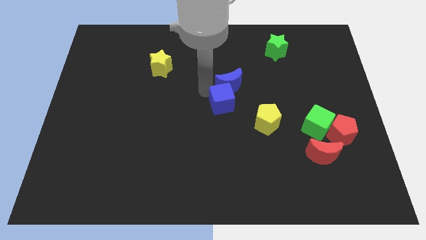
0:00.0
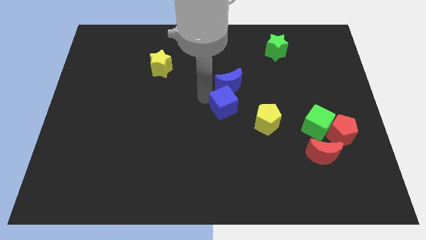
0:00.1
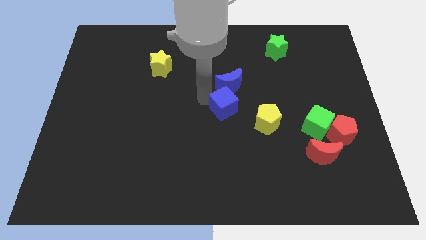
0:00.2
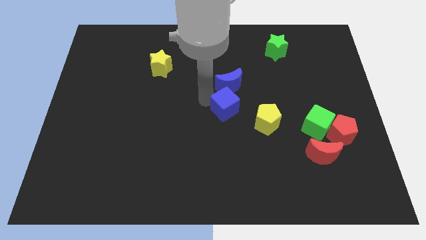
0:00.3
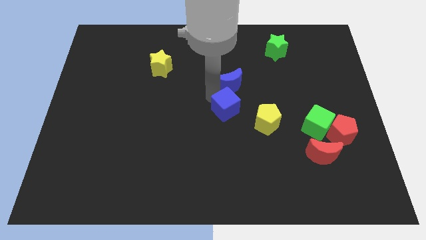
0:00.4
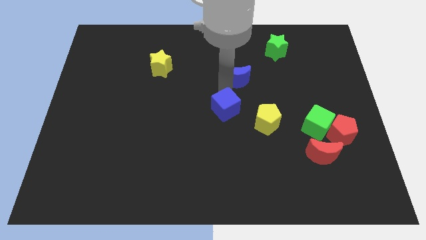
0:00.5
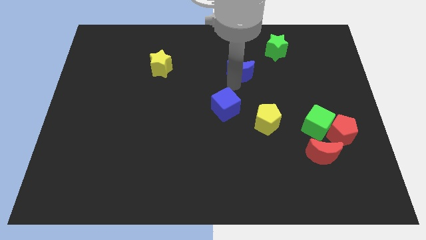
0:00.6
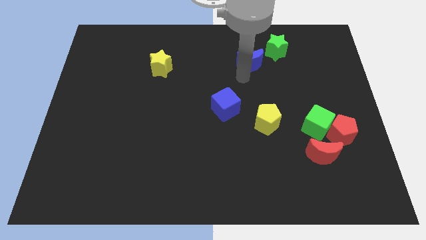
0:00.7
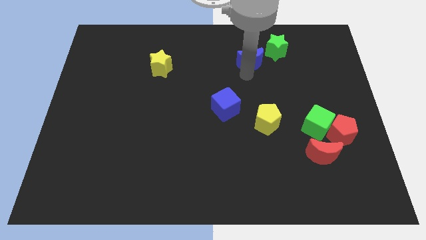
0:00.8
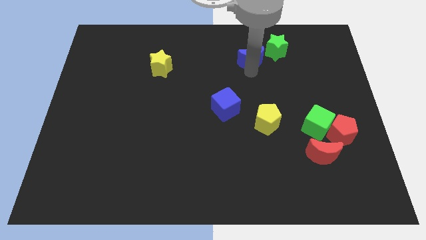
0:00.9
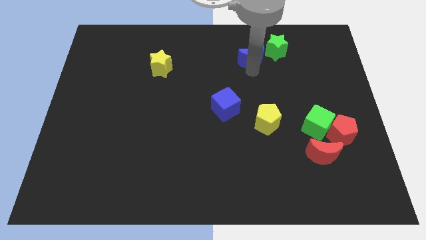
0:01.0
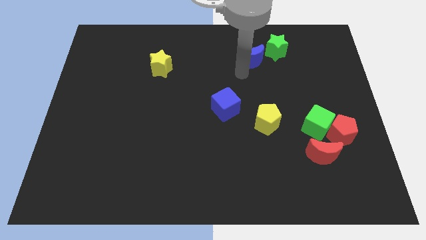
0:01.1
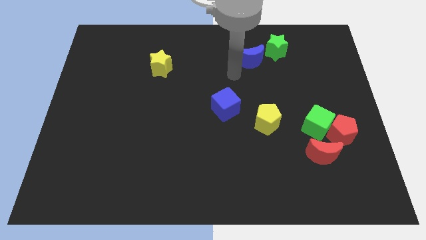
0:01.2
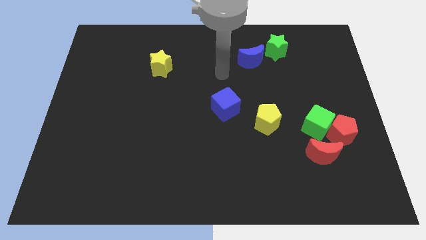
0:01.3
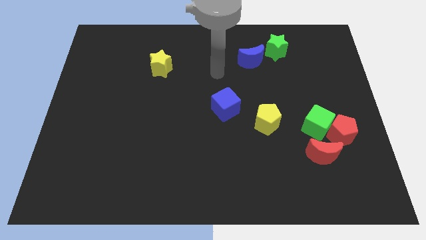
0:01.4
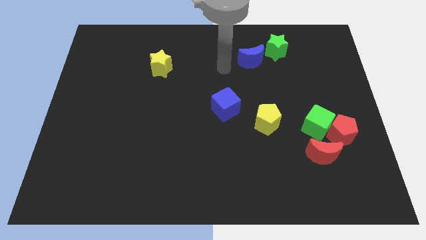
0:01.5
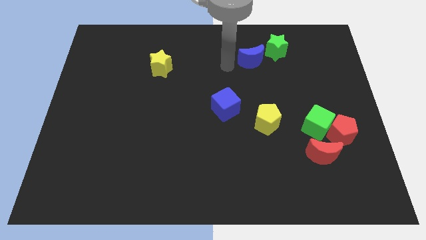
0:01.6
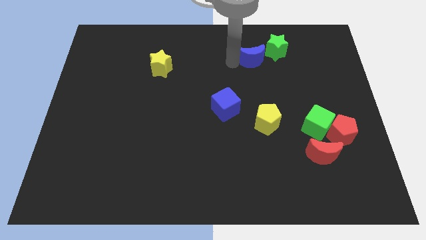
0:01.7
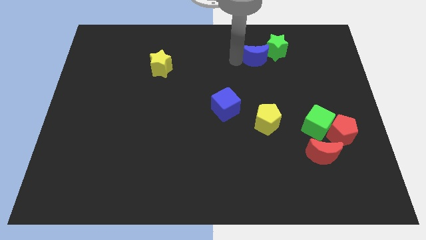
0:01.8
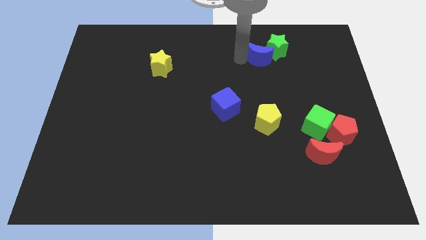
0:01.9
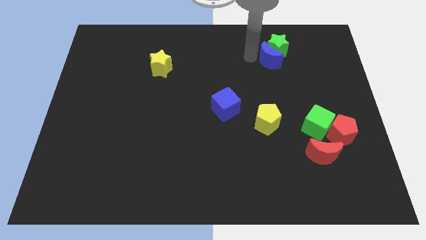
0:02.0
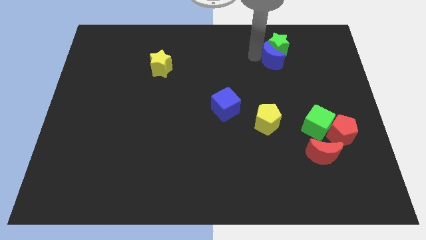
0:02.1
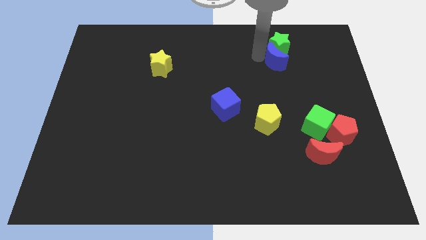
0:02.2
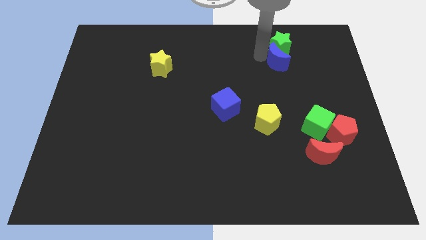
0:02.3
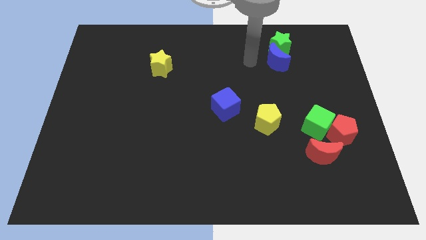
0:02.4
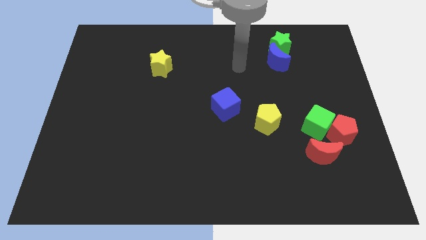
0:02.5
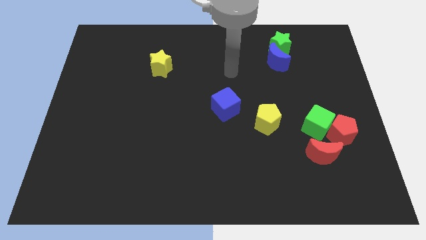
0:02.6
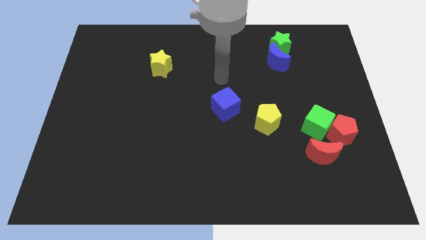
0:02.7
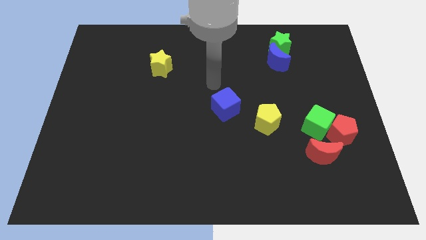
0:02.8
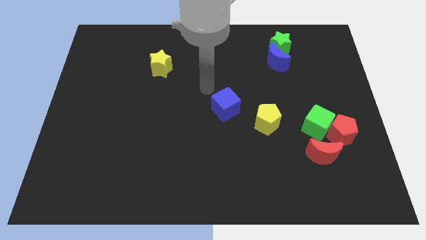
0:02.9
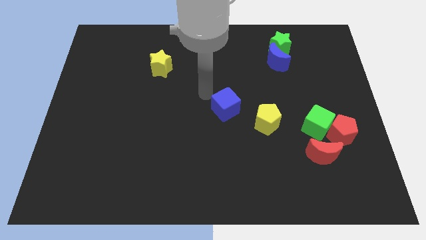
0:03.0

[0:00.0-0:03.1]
push the blue crescent into the green star

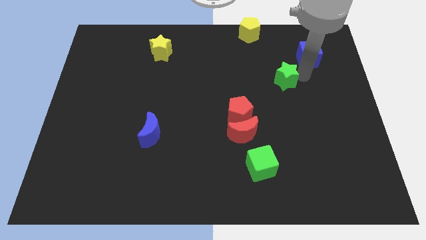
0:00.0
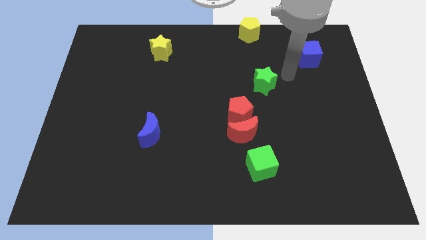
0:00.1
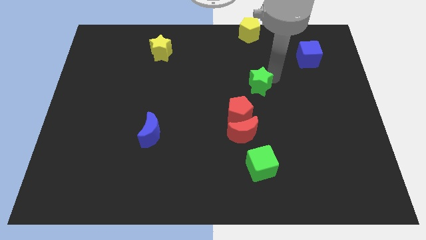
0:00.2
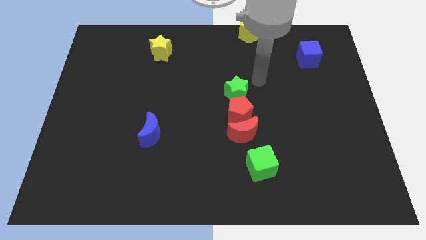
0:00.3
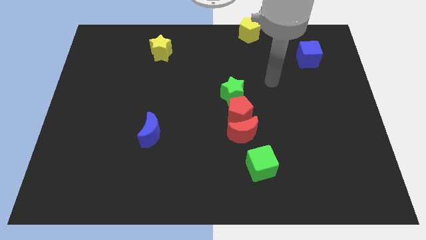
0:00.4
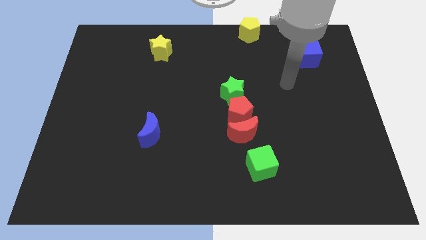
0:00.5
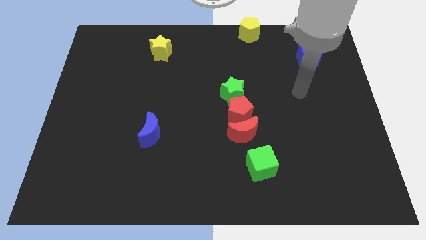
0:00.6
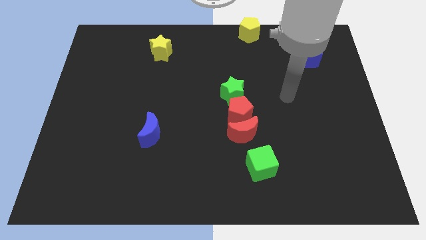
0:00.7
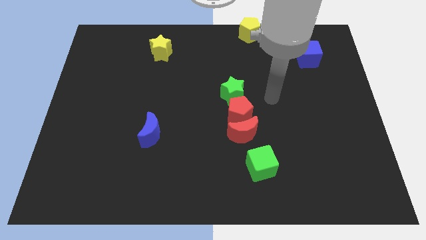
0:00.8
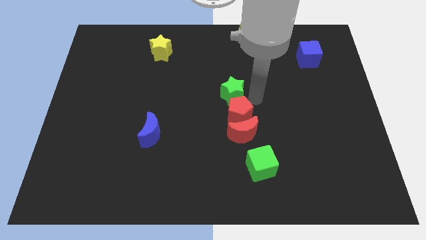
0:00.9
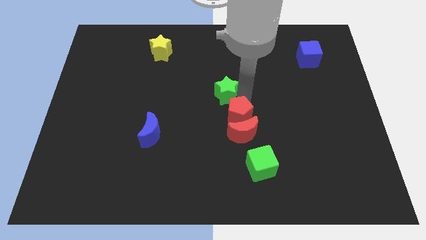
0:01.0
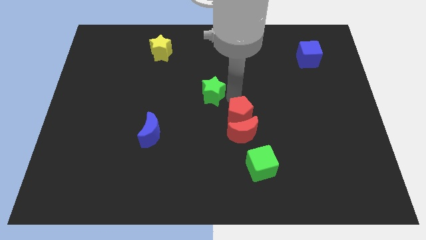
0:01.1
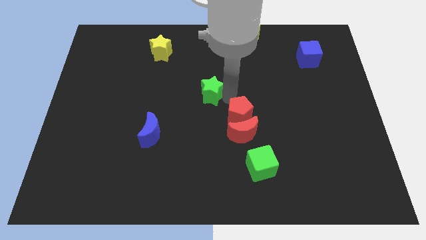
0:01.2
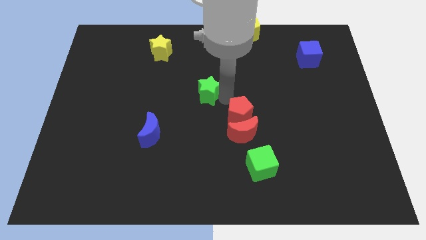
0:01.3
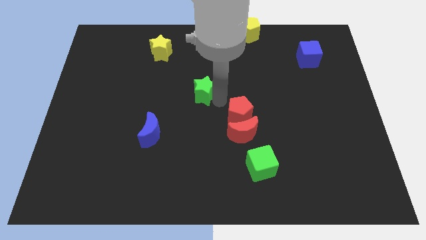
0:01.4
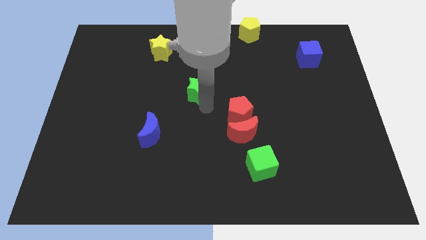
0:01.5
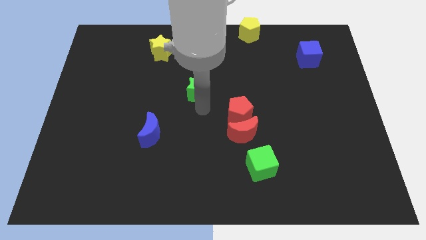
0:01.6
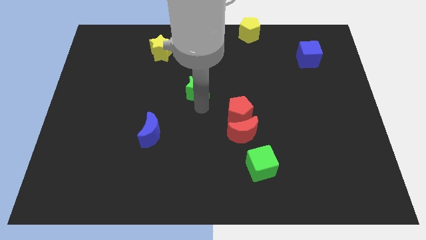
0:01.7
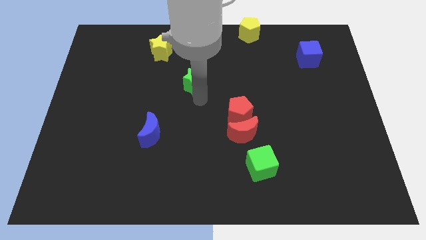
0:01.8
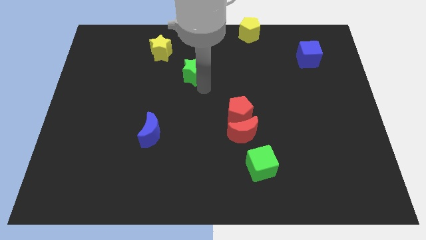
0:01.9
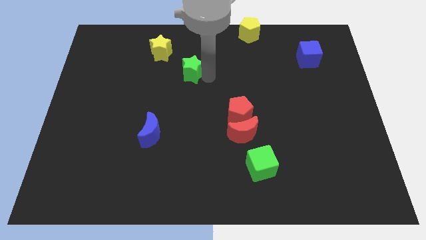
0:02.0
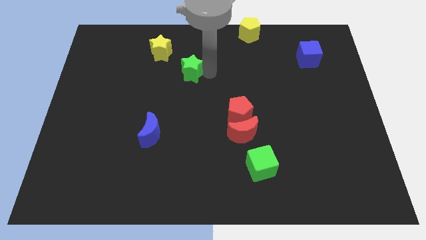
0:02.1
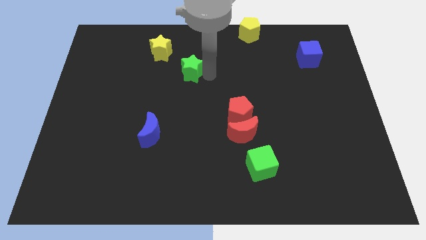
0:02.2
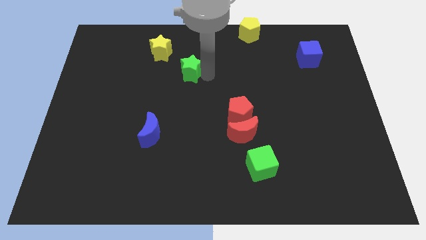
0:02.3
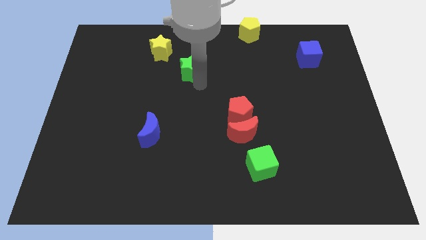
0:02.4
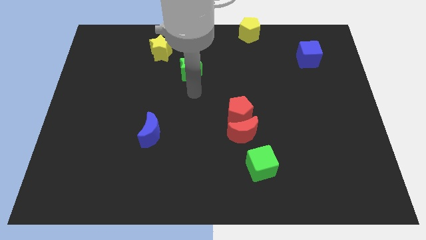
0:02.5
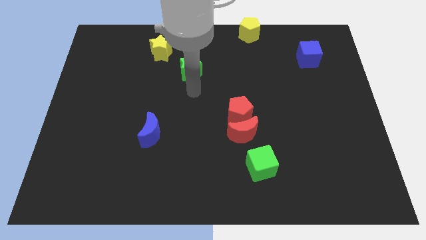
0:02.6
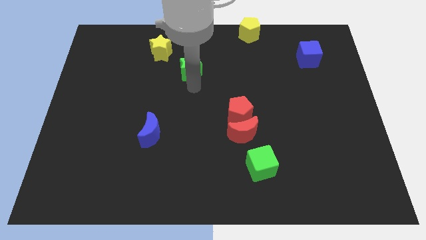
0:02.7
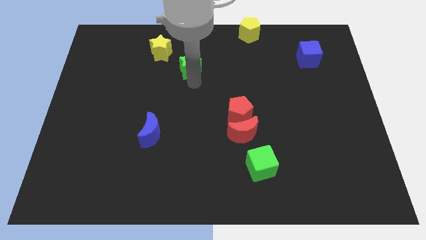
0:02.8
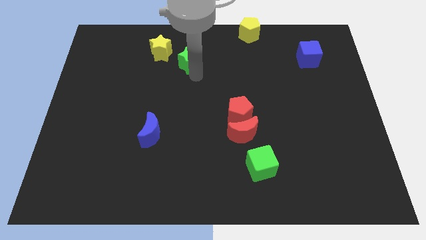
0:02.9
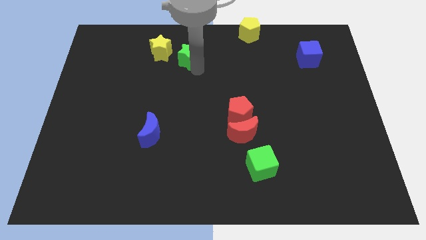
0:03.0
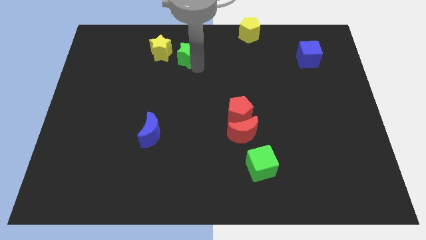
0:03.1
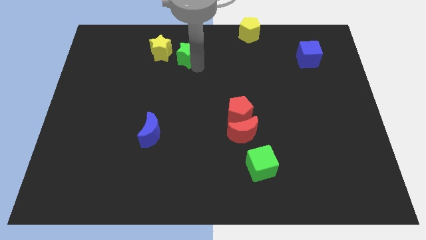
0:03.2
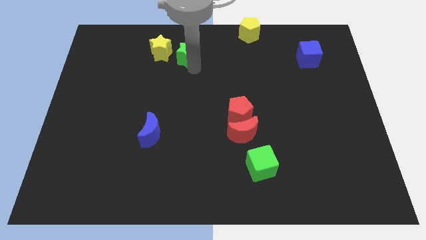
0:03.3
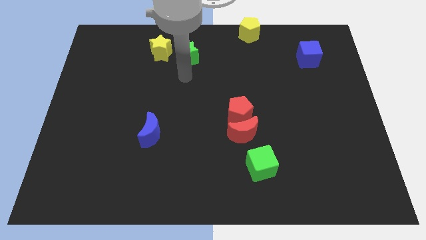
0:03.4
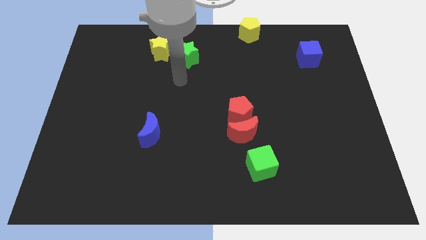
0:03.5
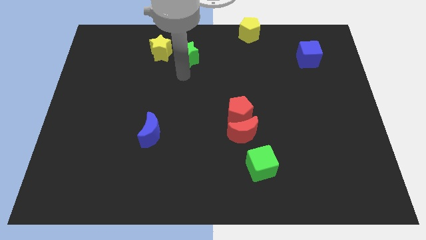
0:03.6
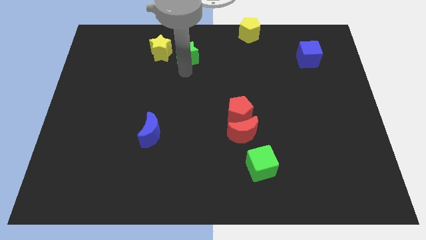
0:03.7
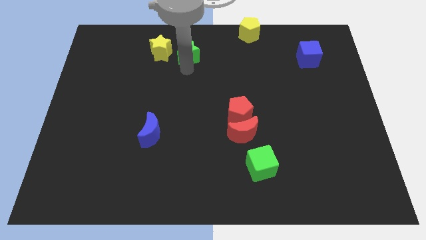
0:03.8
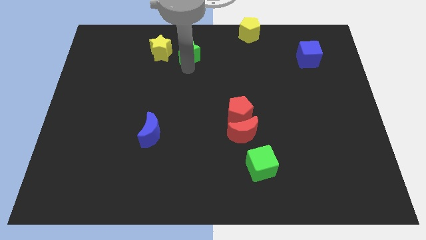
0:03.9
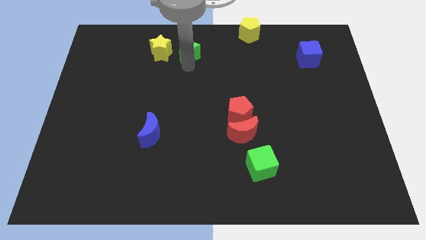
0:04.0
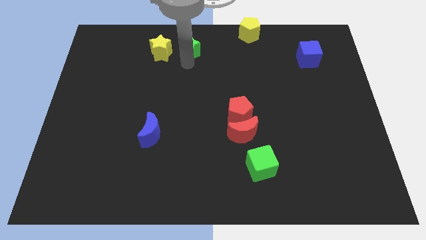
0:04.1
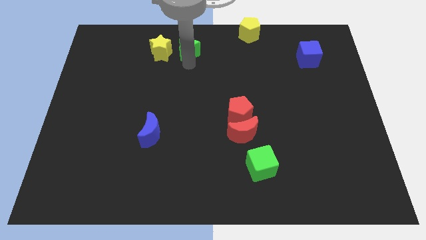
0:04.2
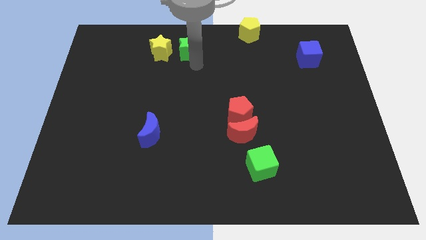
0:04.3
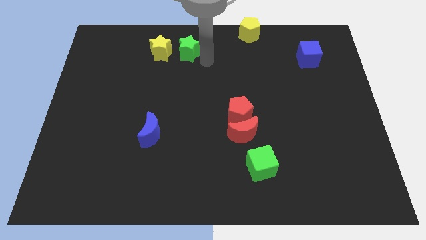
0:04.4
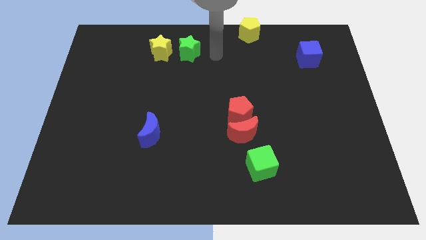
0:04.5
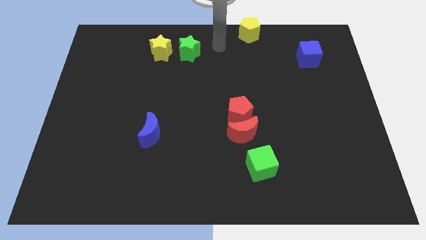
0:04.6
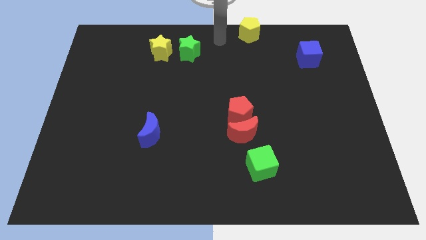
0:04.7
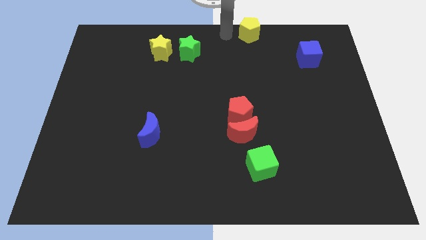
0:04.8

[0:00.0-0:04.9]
put the green star on the right side of the yellow star

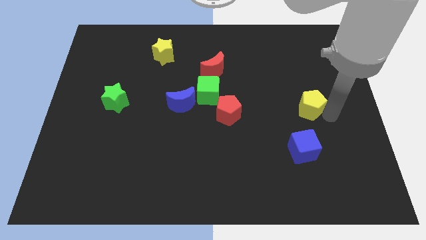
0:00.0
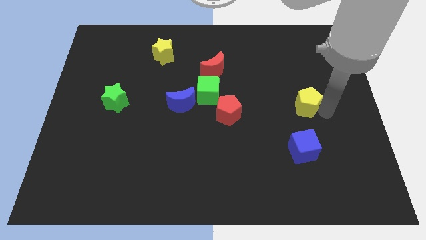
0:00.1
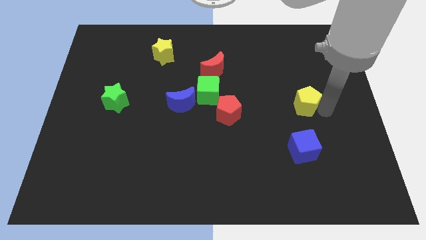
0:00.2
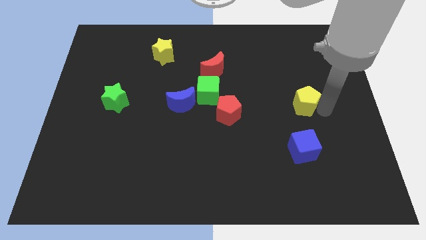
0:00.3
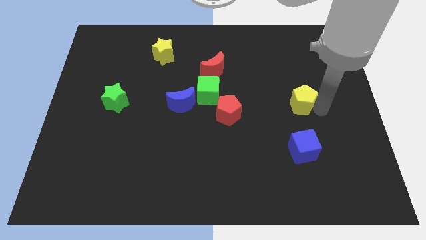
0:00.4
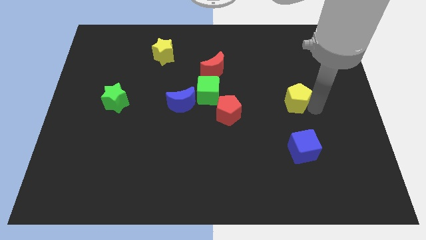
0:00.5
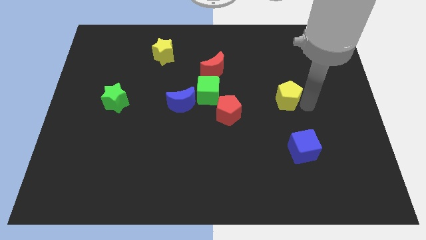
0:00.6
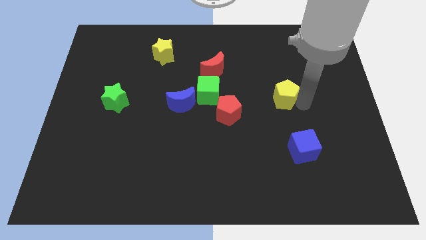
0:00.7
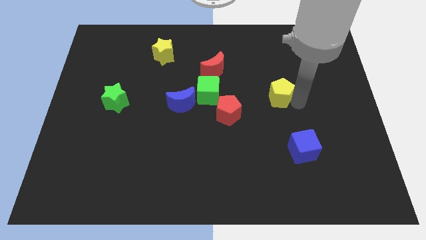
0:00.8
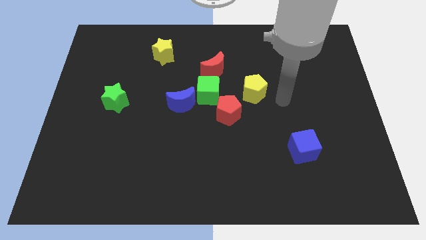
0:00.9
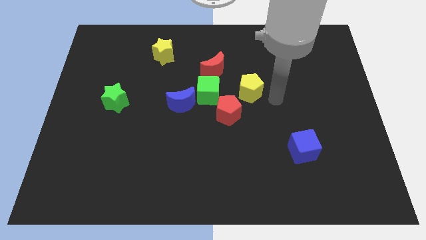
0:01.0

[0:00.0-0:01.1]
slide yellow pentagon to left side towards the red crescent
